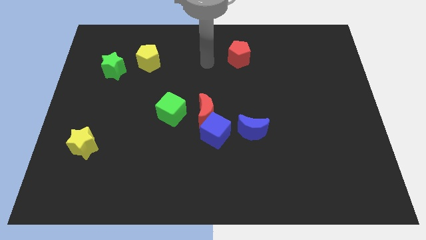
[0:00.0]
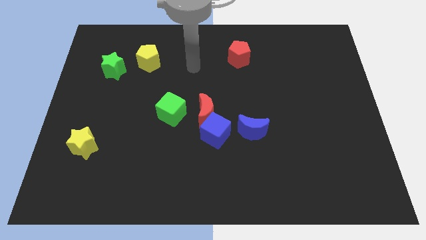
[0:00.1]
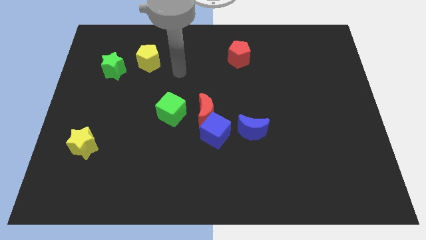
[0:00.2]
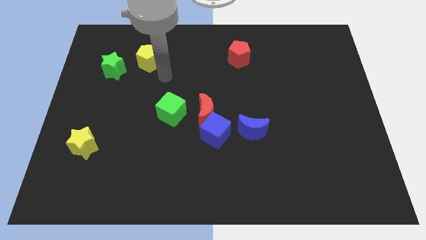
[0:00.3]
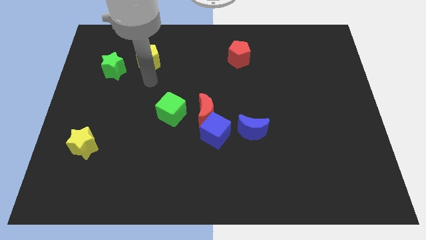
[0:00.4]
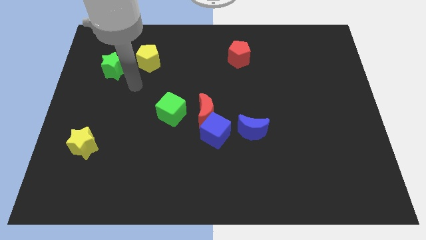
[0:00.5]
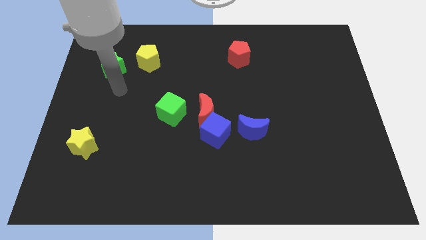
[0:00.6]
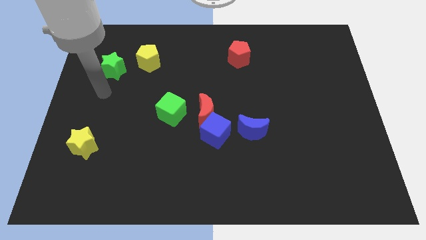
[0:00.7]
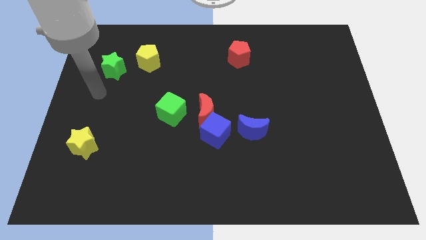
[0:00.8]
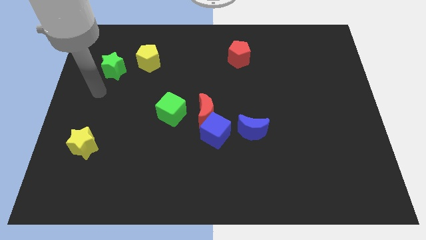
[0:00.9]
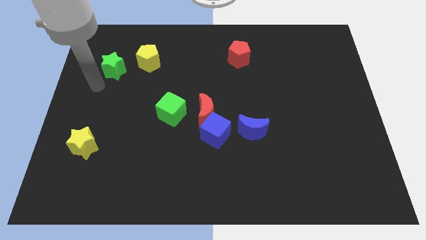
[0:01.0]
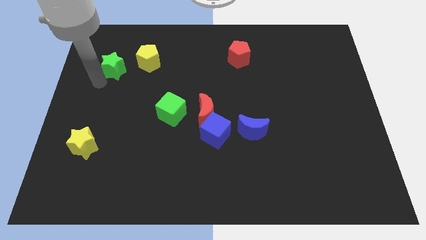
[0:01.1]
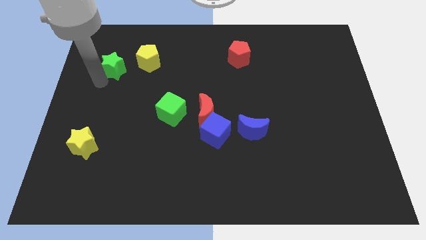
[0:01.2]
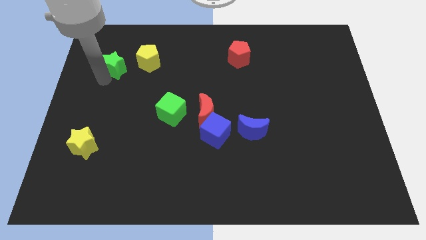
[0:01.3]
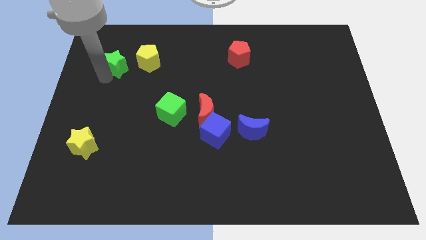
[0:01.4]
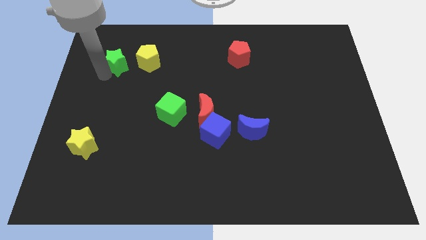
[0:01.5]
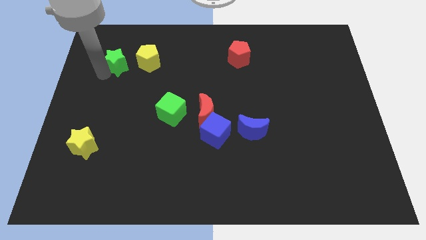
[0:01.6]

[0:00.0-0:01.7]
touch the green star

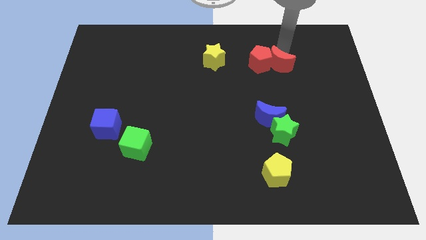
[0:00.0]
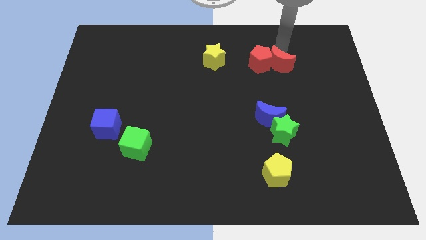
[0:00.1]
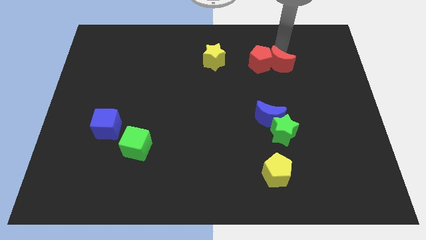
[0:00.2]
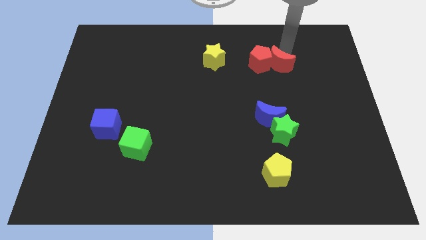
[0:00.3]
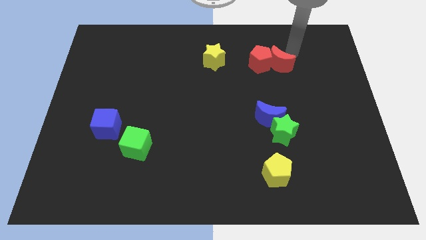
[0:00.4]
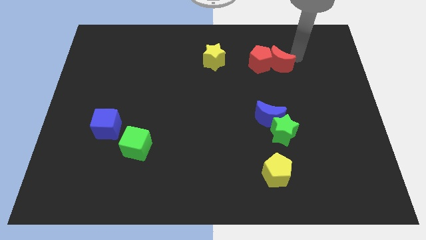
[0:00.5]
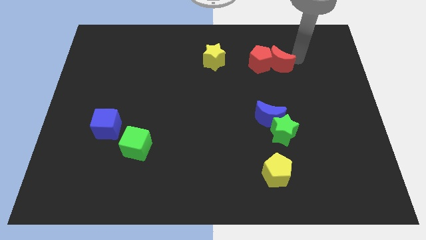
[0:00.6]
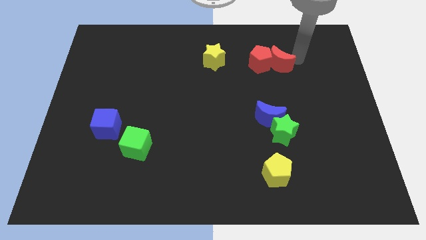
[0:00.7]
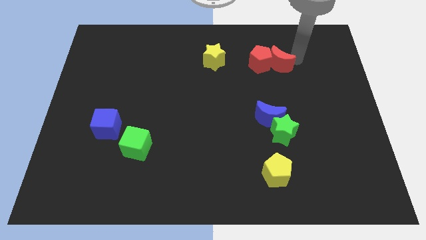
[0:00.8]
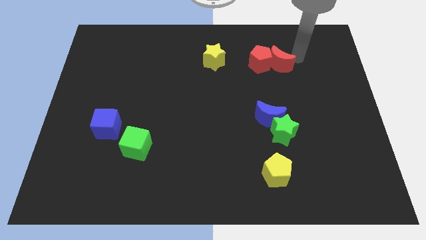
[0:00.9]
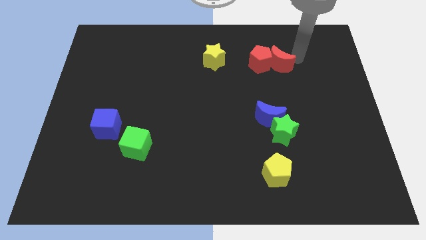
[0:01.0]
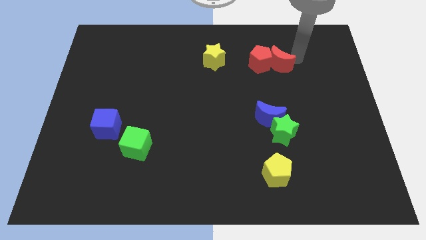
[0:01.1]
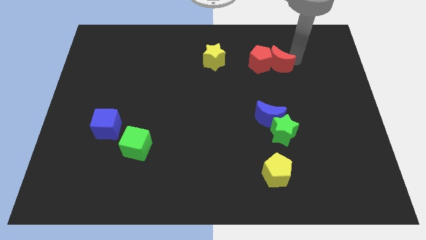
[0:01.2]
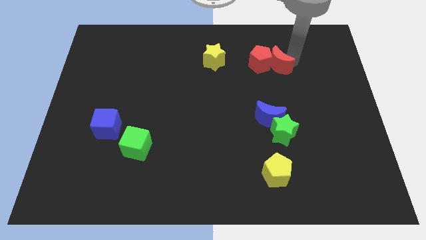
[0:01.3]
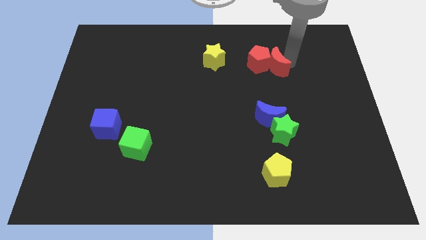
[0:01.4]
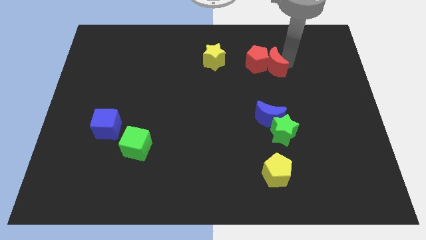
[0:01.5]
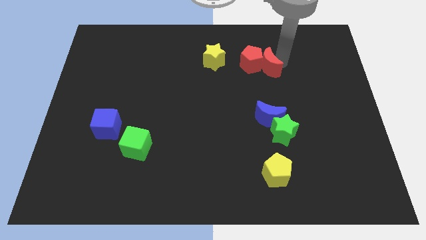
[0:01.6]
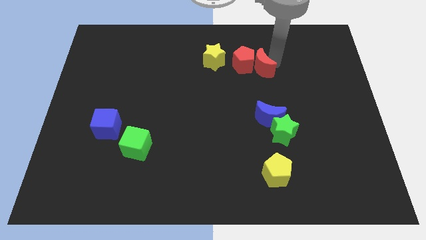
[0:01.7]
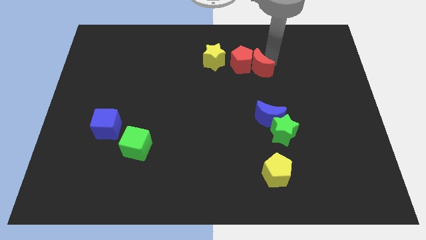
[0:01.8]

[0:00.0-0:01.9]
drag the red crescent along with the red pentagon towards the yellow star

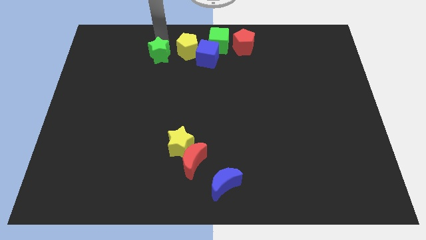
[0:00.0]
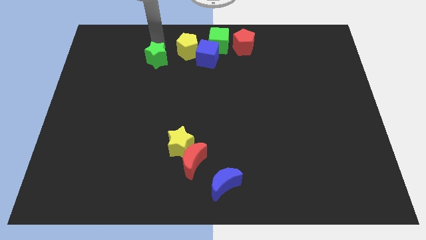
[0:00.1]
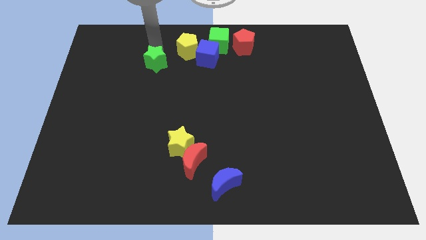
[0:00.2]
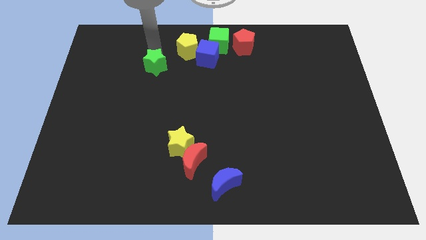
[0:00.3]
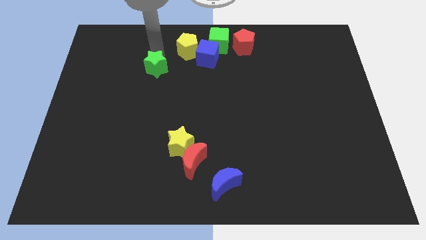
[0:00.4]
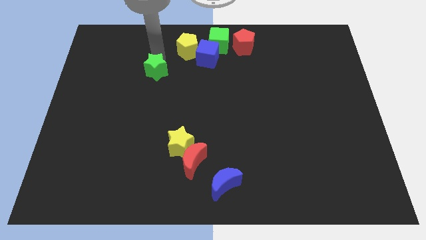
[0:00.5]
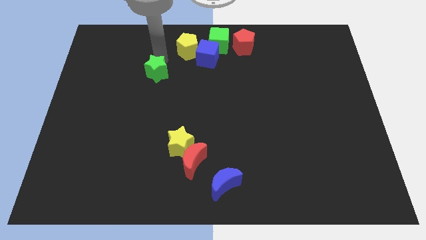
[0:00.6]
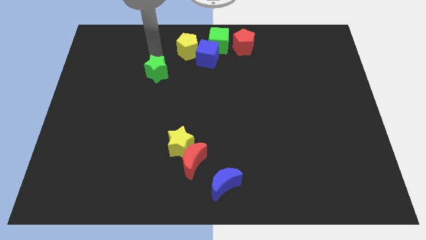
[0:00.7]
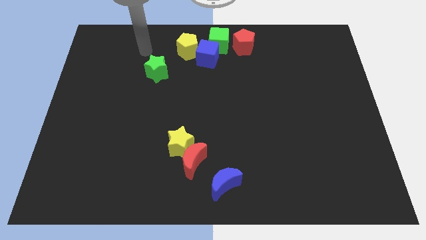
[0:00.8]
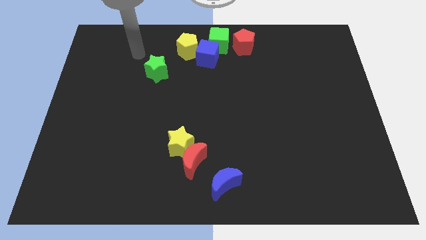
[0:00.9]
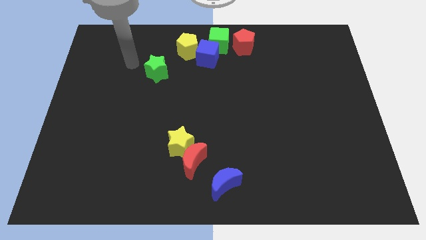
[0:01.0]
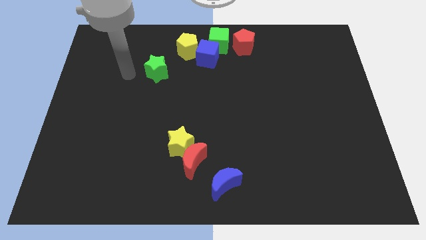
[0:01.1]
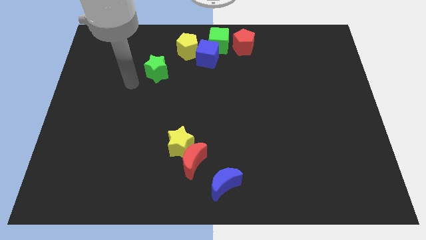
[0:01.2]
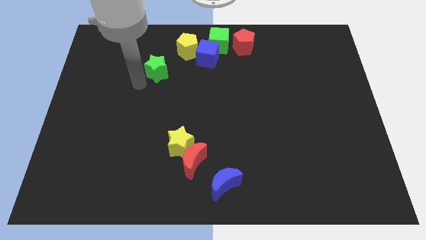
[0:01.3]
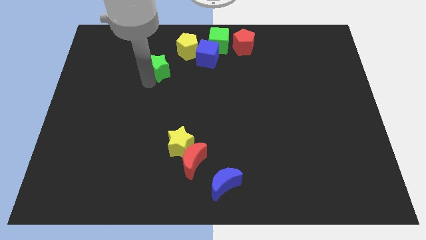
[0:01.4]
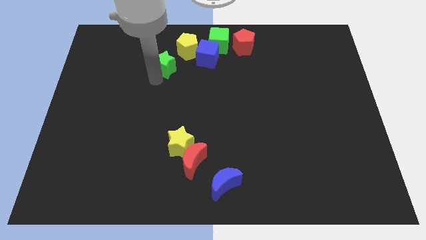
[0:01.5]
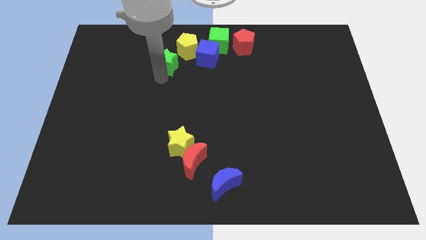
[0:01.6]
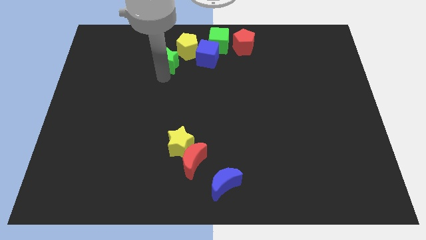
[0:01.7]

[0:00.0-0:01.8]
place the green star to the bottom left of the yellow pentagon

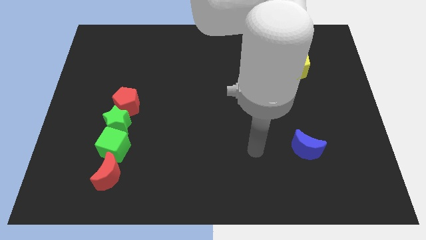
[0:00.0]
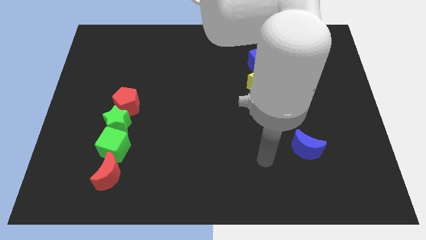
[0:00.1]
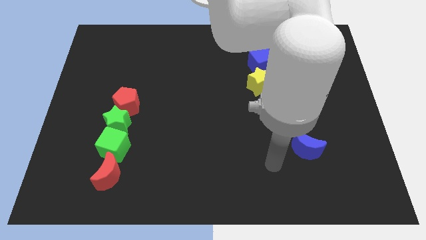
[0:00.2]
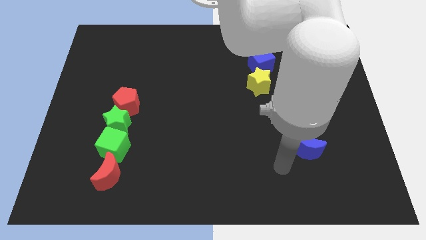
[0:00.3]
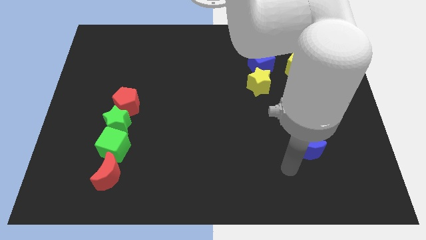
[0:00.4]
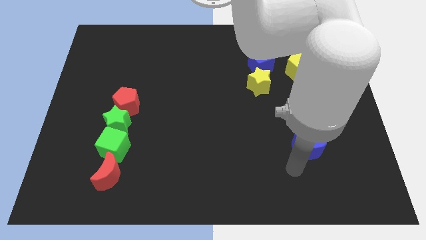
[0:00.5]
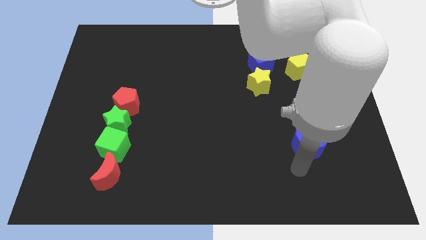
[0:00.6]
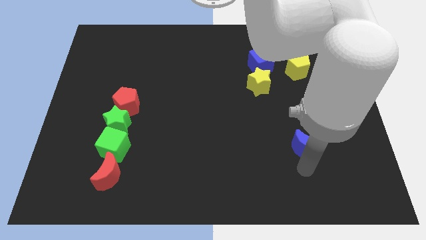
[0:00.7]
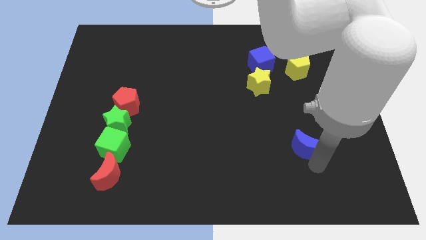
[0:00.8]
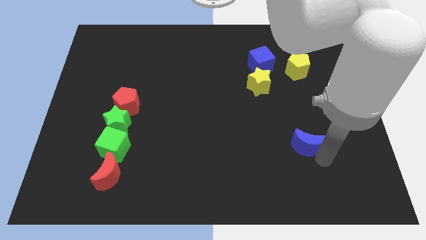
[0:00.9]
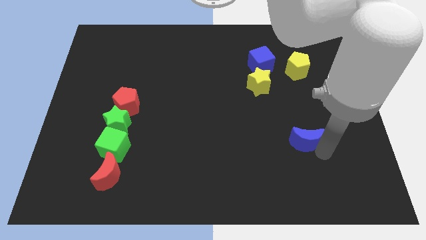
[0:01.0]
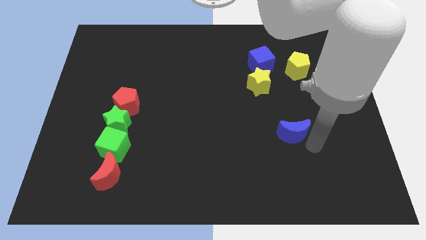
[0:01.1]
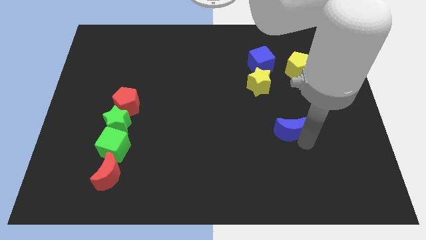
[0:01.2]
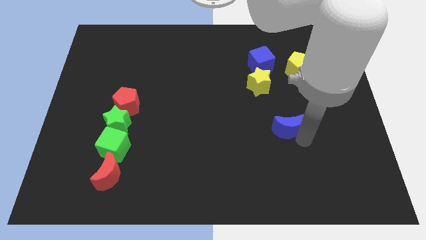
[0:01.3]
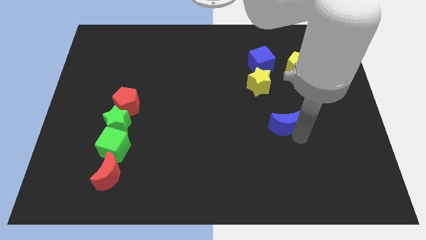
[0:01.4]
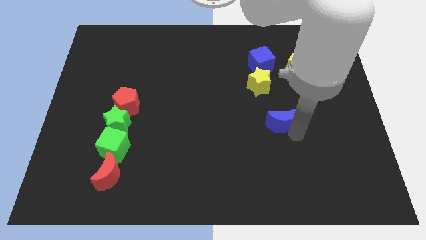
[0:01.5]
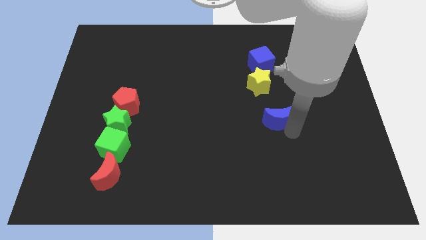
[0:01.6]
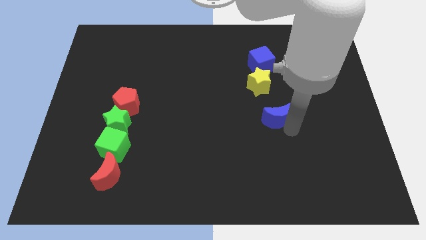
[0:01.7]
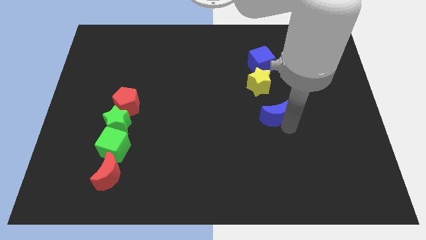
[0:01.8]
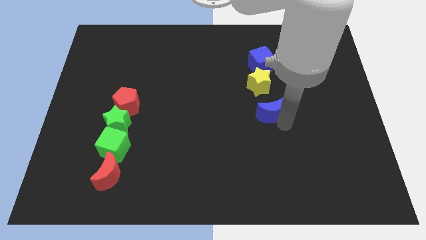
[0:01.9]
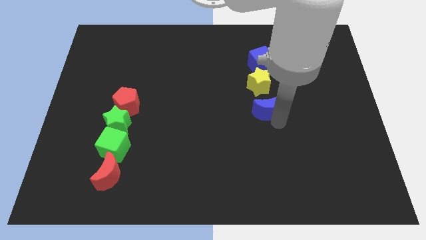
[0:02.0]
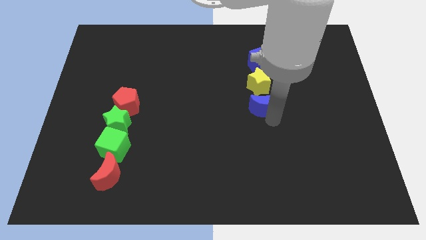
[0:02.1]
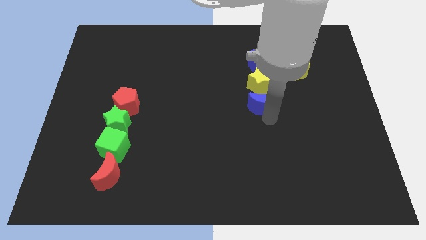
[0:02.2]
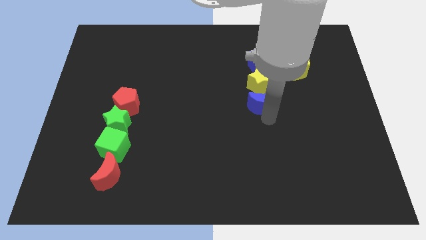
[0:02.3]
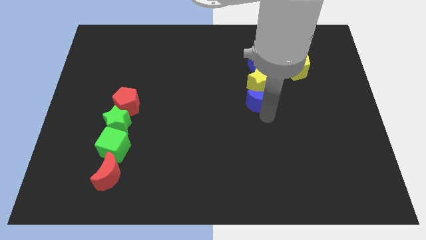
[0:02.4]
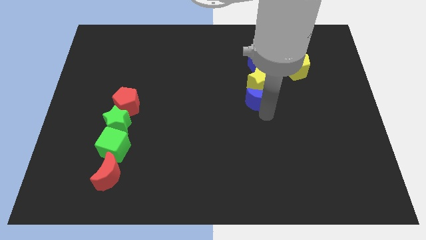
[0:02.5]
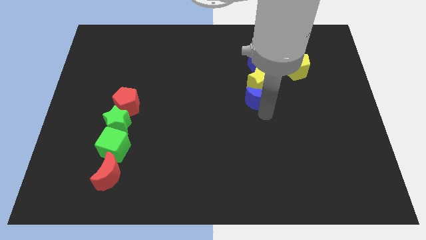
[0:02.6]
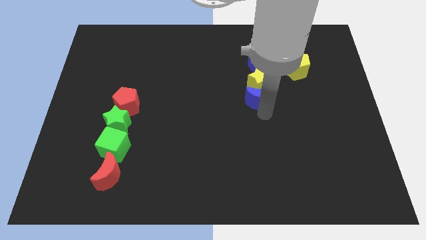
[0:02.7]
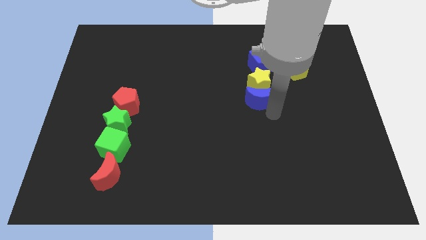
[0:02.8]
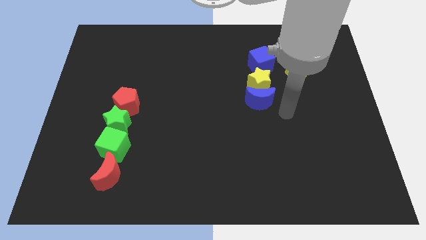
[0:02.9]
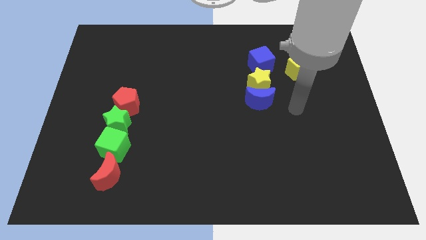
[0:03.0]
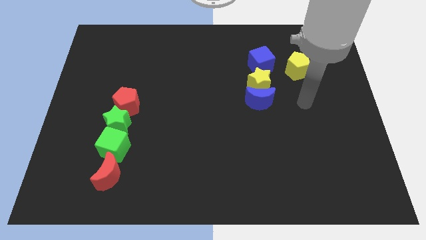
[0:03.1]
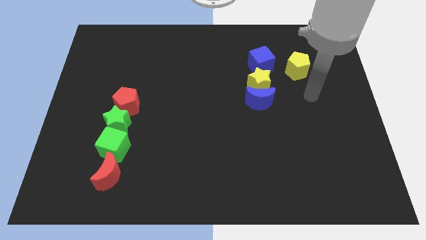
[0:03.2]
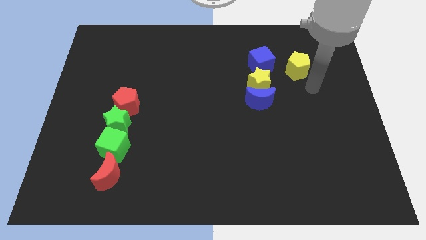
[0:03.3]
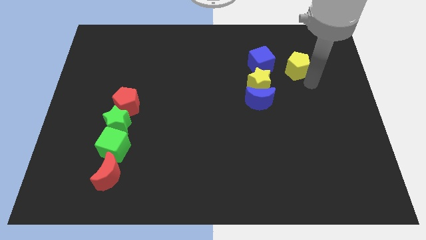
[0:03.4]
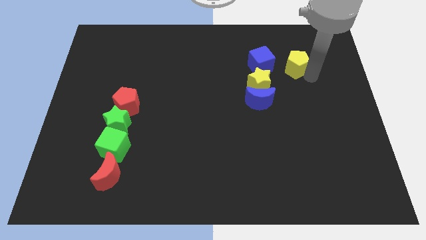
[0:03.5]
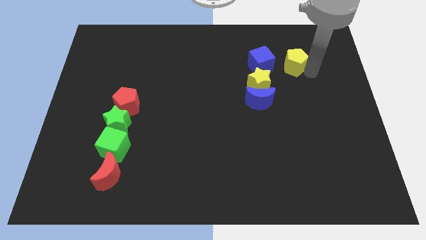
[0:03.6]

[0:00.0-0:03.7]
push the blue moon to the bottom of the yellow star
